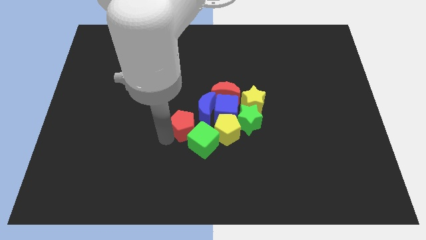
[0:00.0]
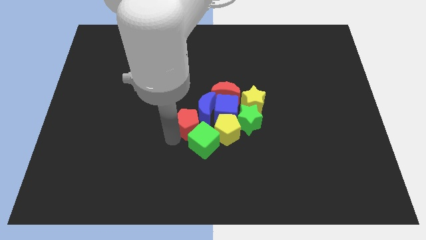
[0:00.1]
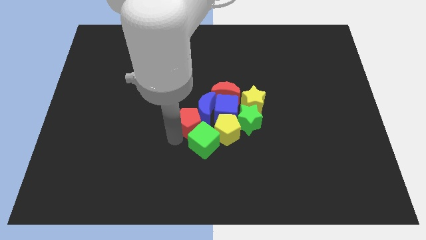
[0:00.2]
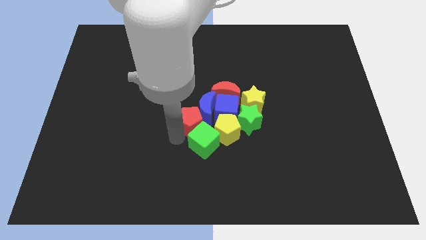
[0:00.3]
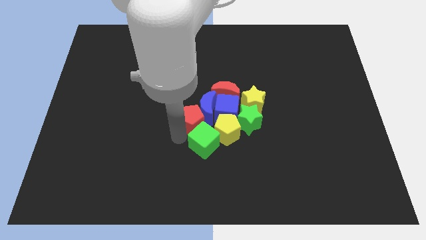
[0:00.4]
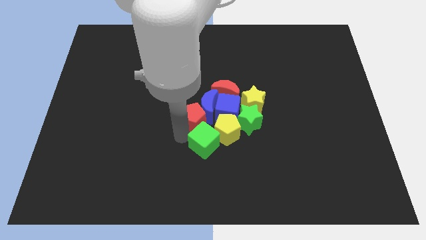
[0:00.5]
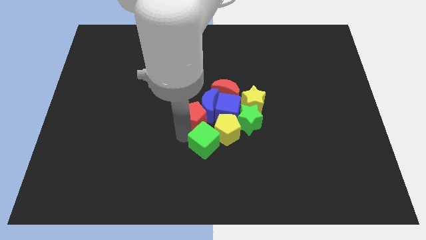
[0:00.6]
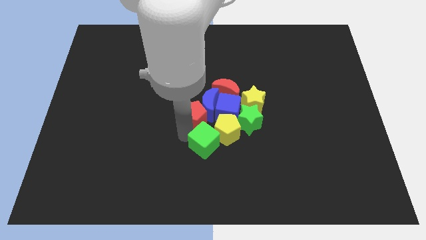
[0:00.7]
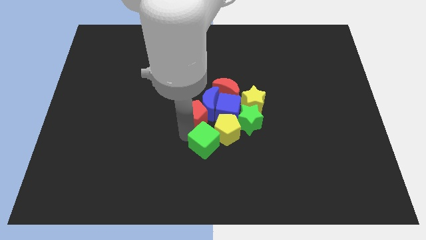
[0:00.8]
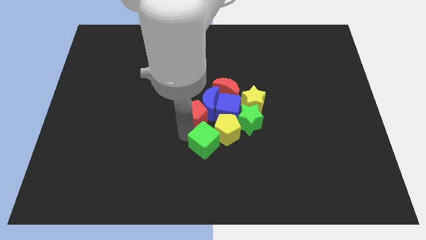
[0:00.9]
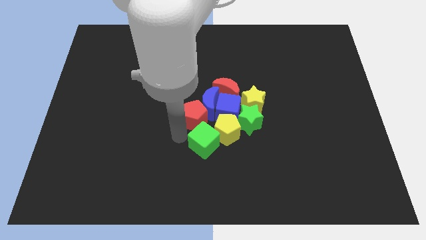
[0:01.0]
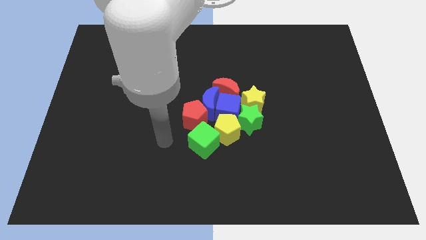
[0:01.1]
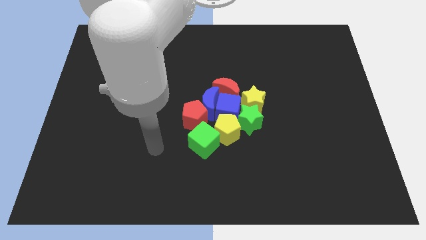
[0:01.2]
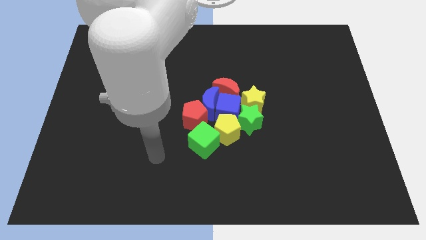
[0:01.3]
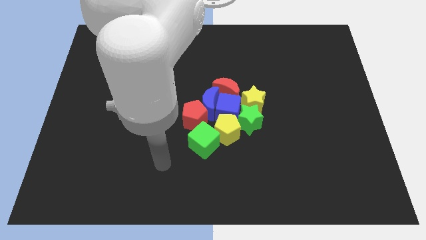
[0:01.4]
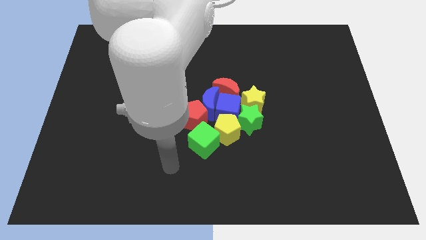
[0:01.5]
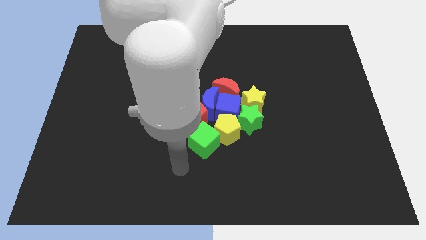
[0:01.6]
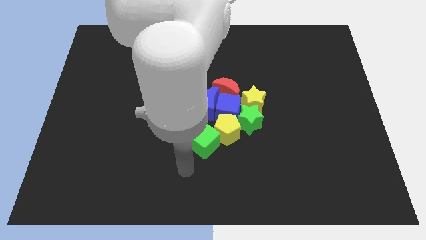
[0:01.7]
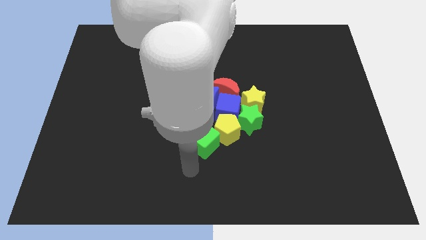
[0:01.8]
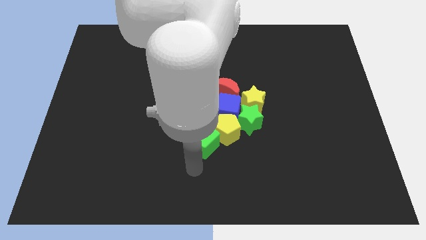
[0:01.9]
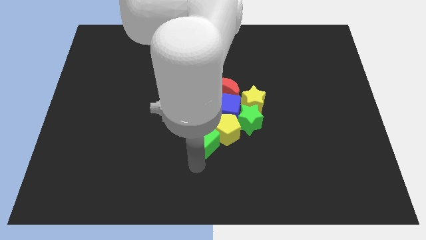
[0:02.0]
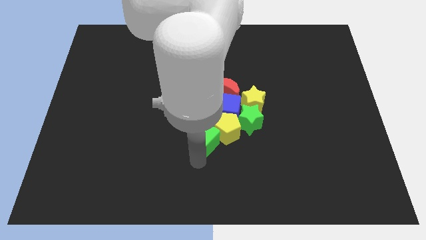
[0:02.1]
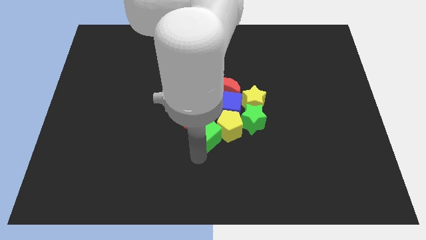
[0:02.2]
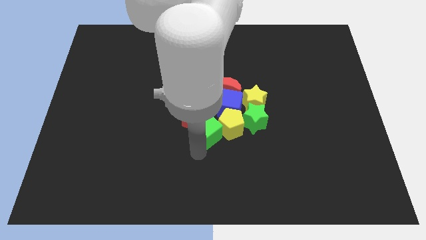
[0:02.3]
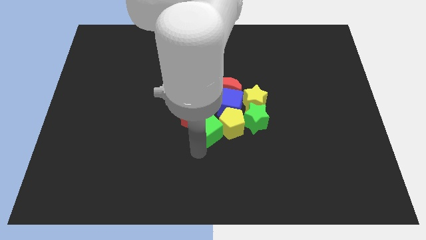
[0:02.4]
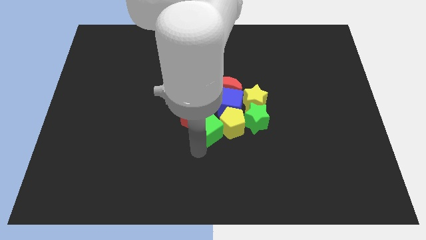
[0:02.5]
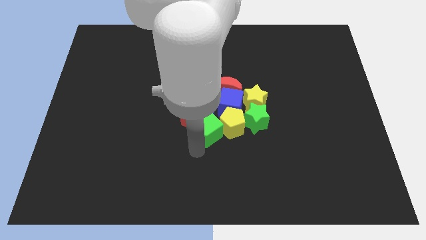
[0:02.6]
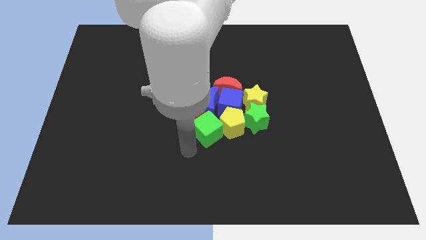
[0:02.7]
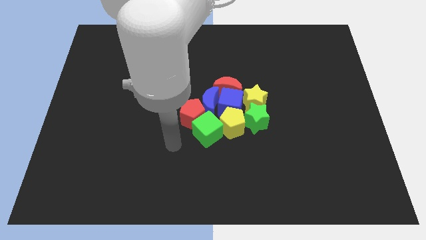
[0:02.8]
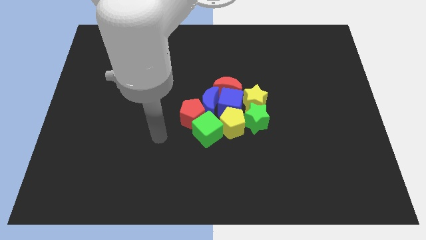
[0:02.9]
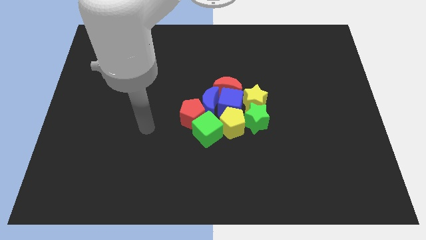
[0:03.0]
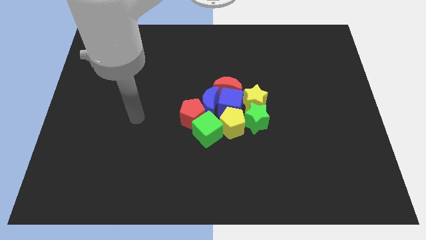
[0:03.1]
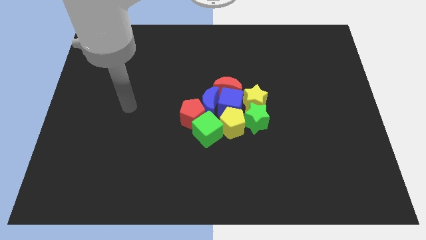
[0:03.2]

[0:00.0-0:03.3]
group up all the blocks

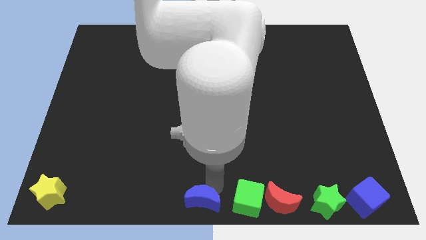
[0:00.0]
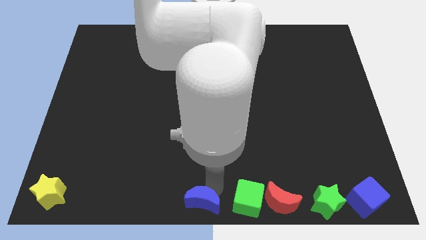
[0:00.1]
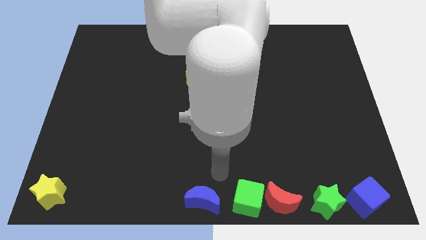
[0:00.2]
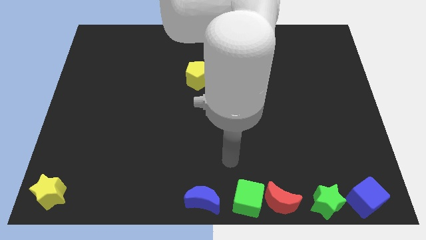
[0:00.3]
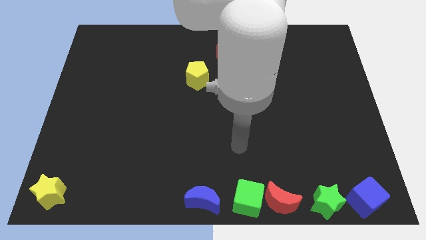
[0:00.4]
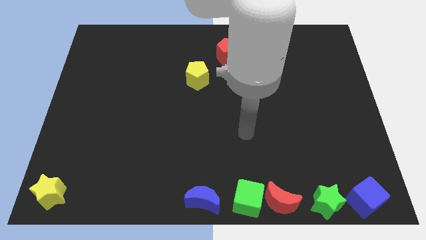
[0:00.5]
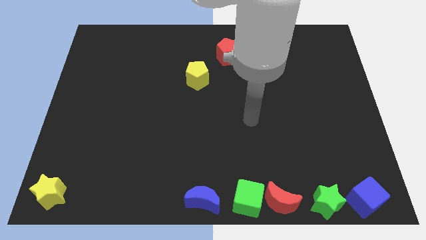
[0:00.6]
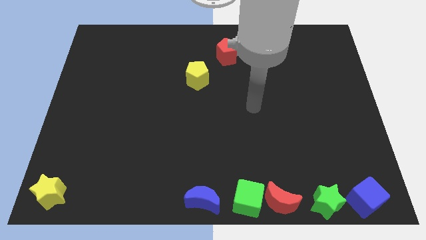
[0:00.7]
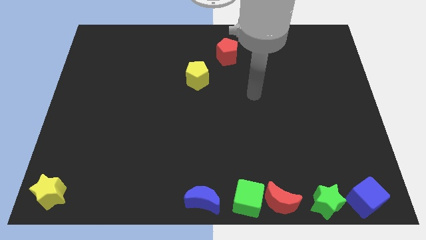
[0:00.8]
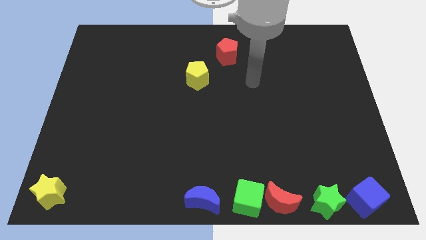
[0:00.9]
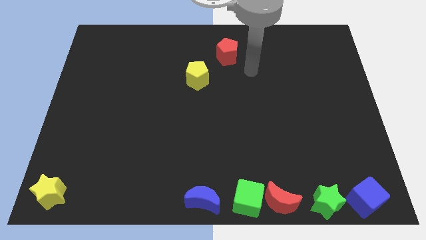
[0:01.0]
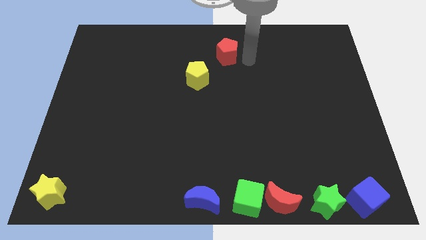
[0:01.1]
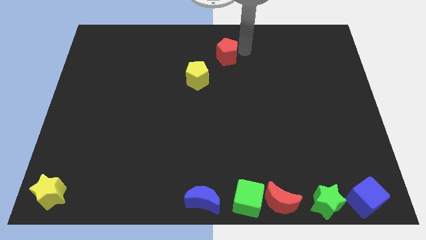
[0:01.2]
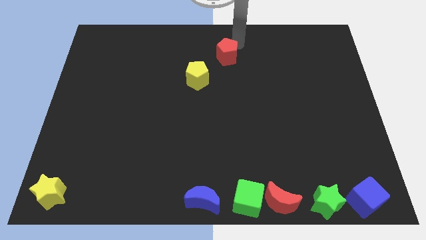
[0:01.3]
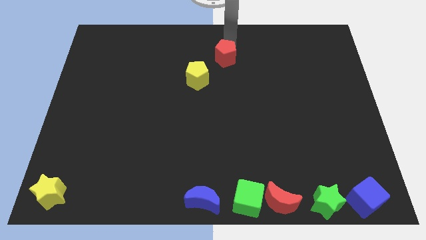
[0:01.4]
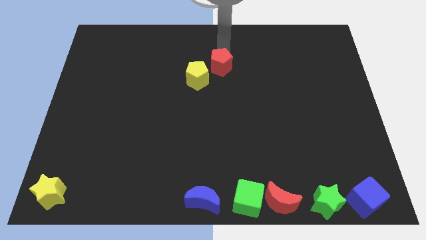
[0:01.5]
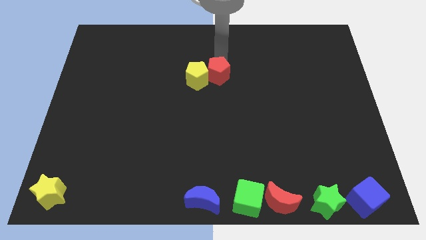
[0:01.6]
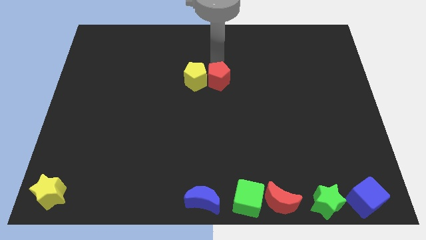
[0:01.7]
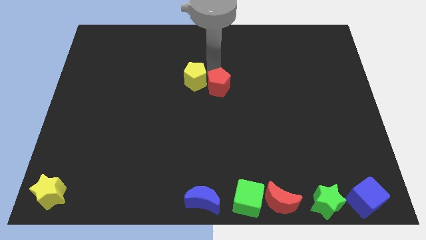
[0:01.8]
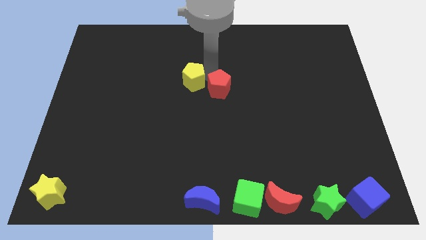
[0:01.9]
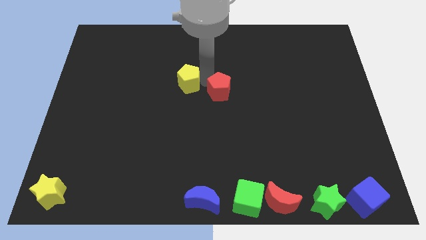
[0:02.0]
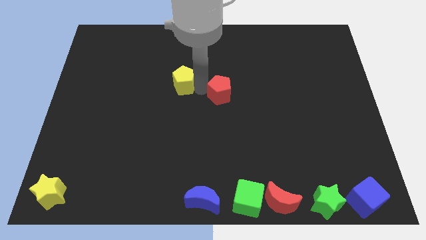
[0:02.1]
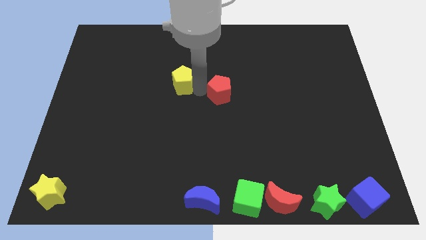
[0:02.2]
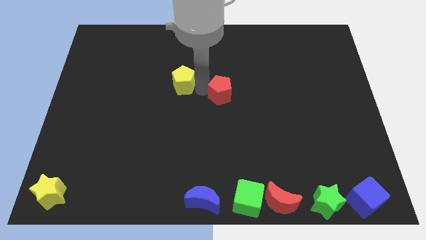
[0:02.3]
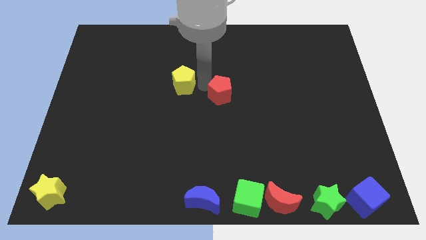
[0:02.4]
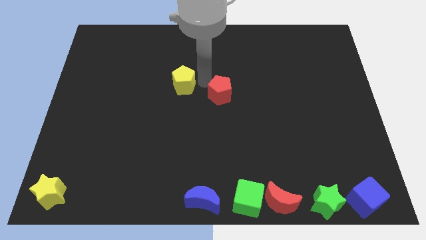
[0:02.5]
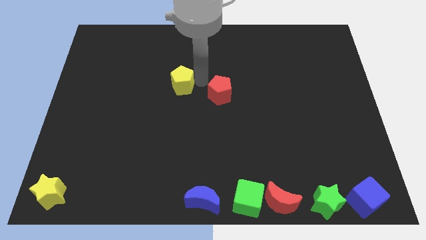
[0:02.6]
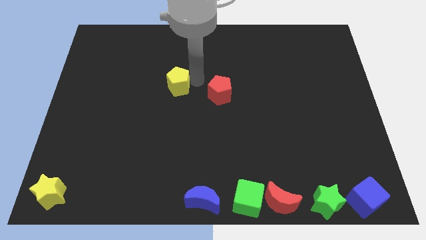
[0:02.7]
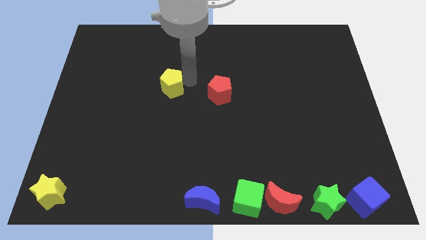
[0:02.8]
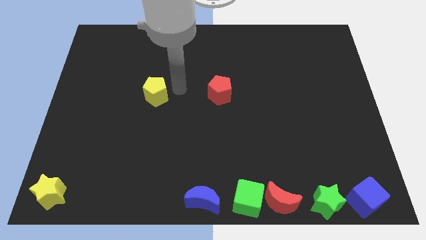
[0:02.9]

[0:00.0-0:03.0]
move your arm away from the blue moon

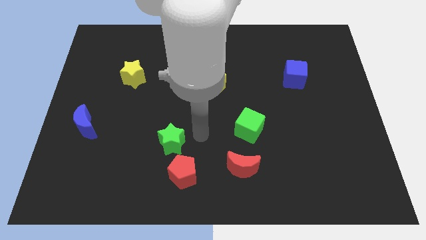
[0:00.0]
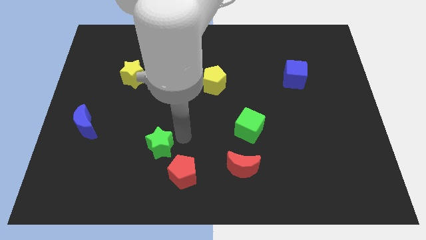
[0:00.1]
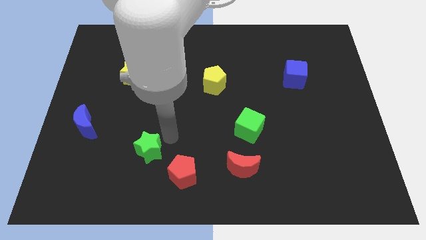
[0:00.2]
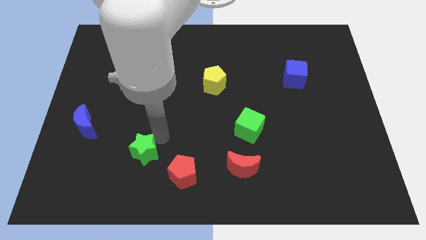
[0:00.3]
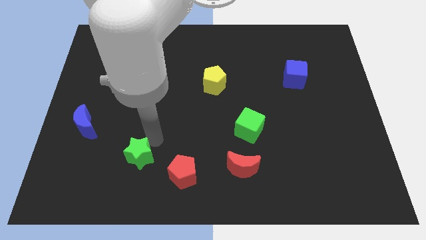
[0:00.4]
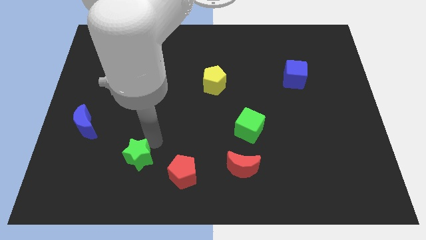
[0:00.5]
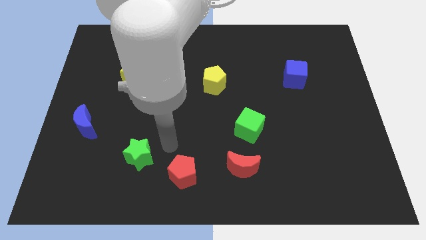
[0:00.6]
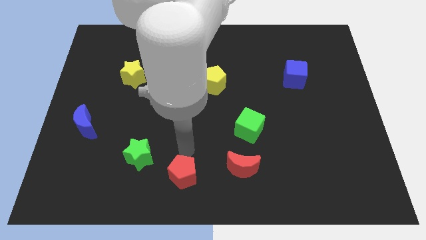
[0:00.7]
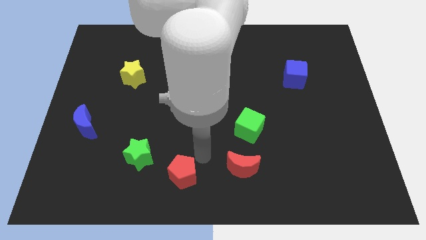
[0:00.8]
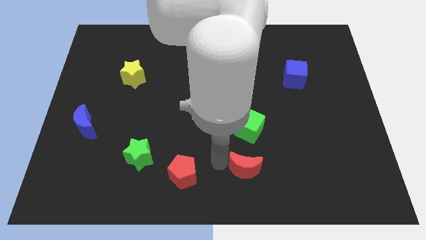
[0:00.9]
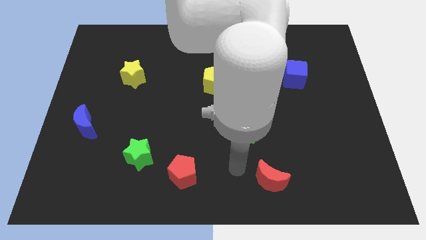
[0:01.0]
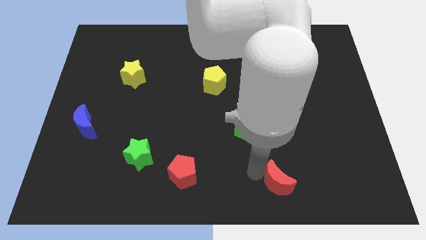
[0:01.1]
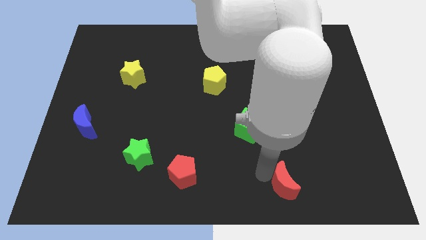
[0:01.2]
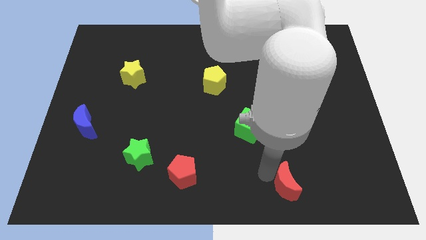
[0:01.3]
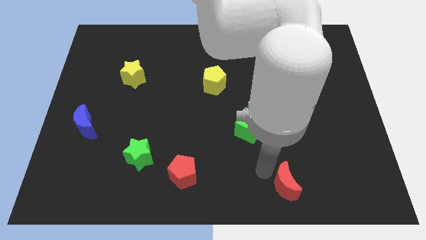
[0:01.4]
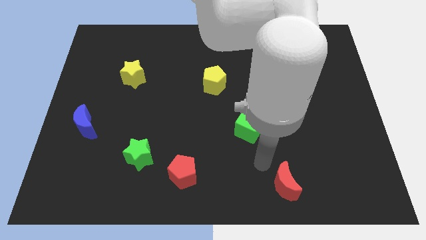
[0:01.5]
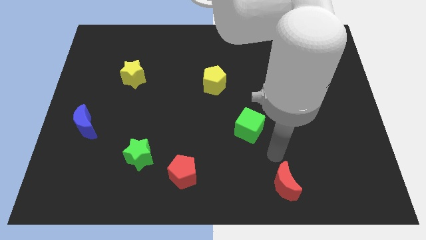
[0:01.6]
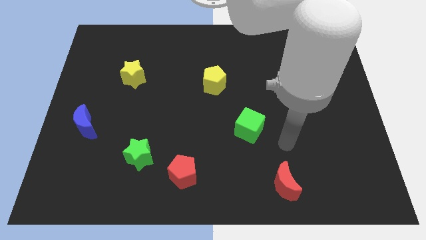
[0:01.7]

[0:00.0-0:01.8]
move the green star diagonal to the red pentagon

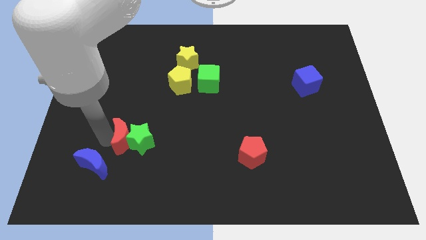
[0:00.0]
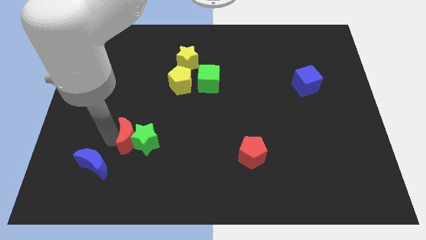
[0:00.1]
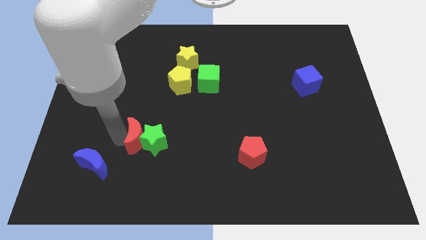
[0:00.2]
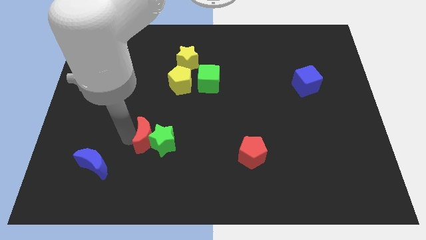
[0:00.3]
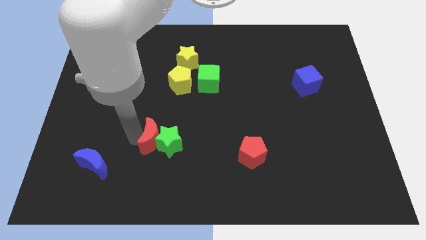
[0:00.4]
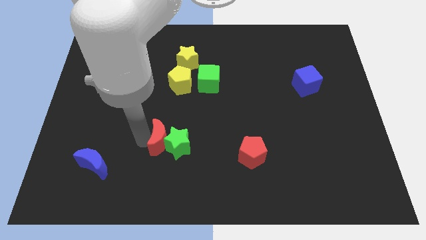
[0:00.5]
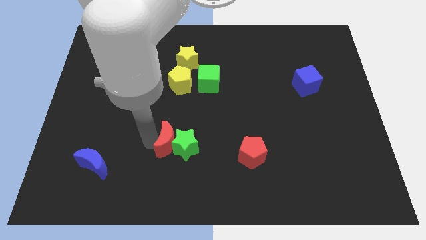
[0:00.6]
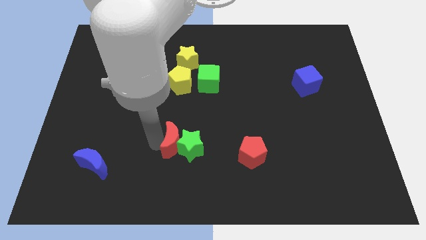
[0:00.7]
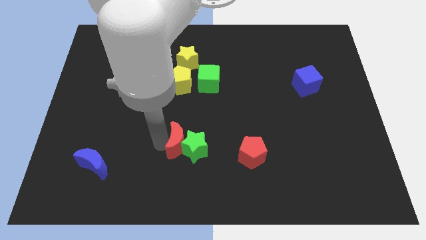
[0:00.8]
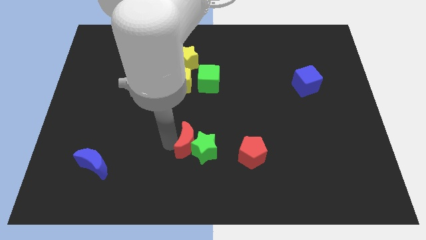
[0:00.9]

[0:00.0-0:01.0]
move red crescent and green star parallel to red pentagon
